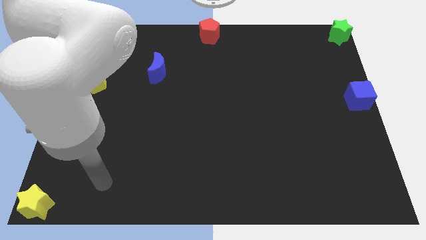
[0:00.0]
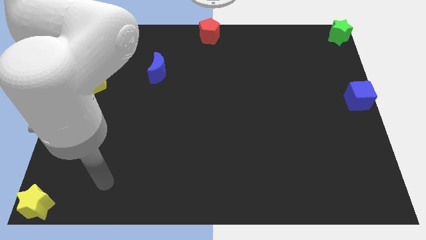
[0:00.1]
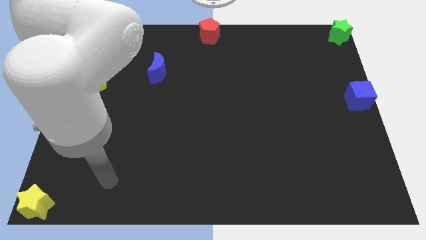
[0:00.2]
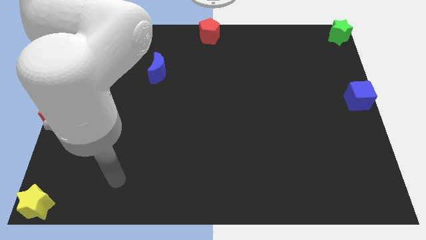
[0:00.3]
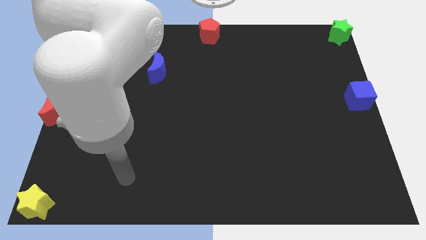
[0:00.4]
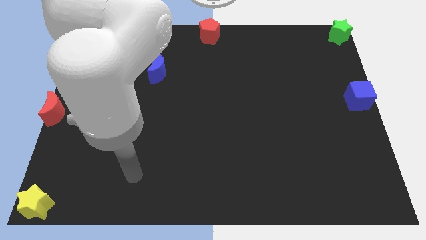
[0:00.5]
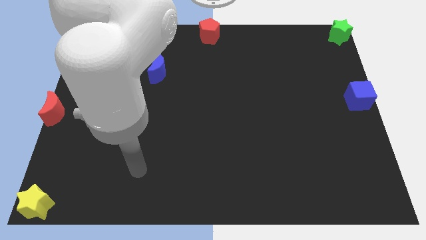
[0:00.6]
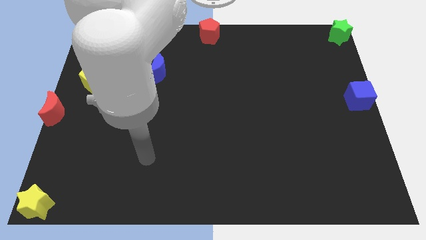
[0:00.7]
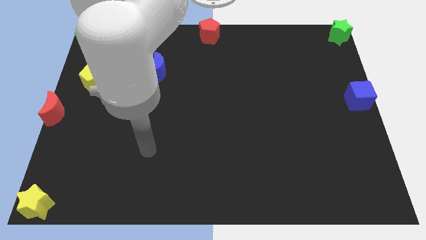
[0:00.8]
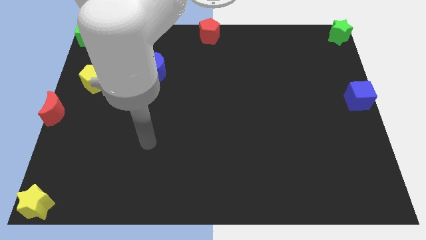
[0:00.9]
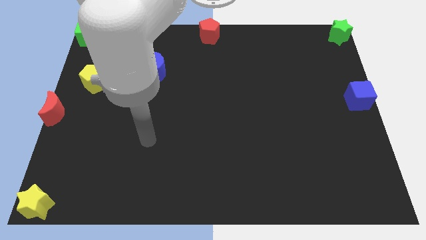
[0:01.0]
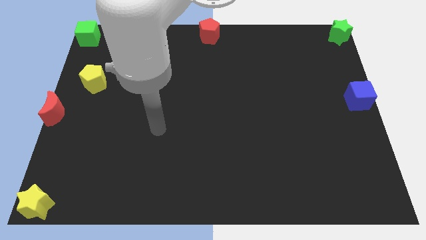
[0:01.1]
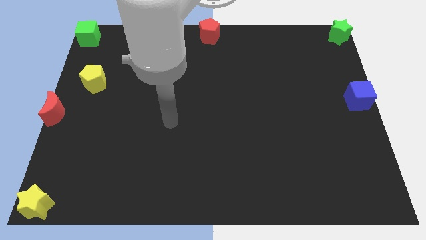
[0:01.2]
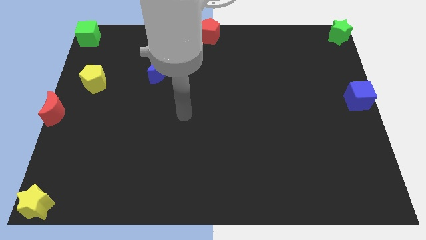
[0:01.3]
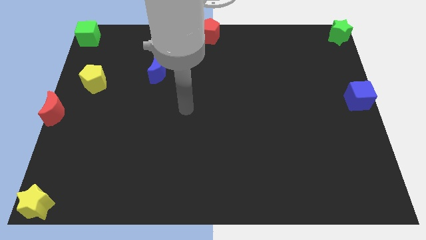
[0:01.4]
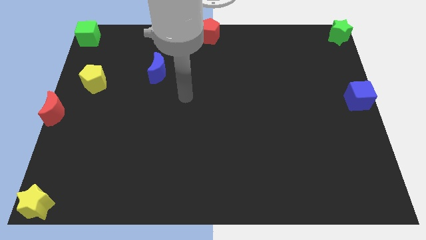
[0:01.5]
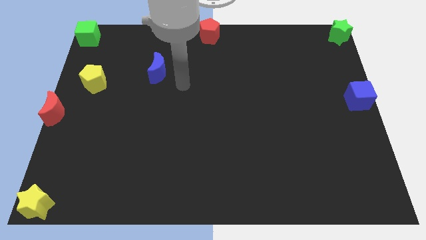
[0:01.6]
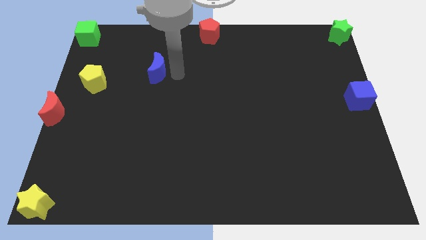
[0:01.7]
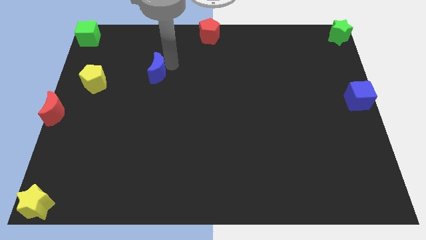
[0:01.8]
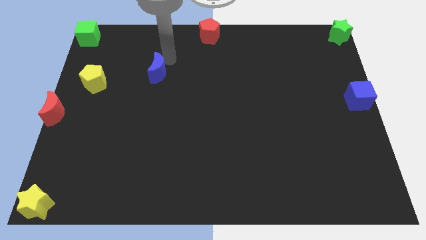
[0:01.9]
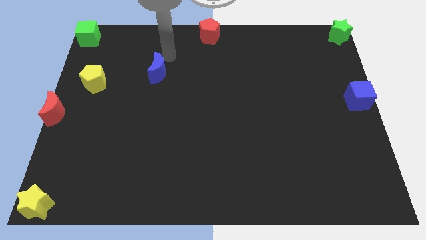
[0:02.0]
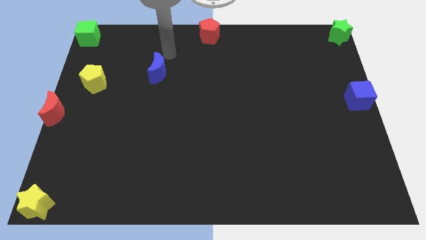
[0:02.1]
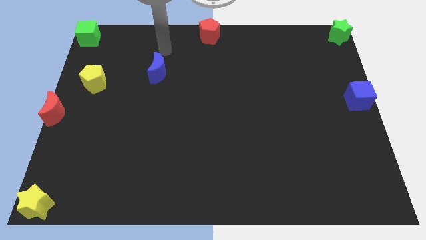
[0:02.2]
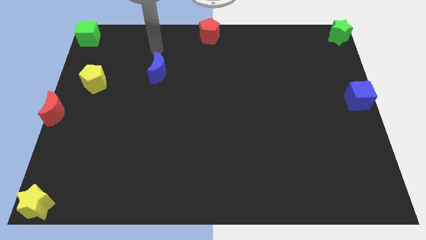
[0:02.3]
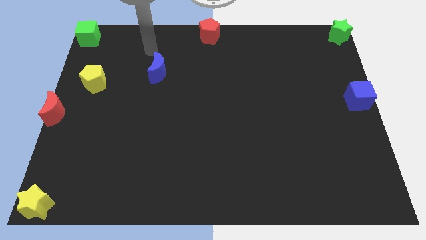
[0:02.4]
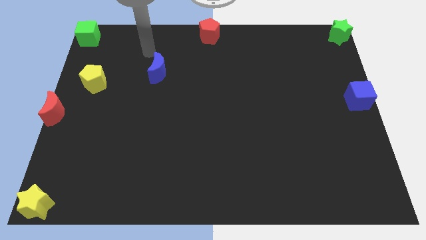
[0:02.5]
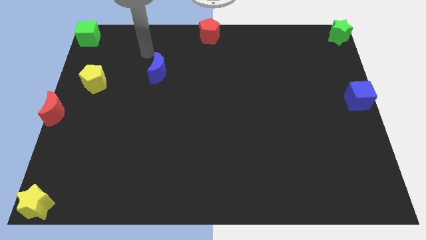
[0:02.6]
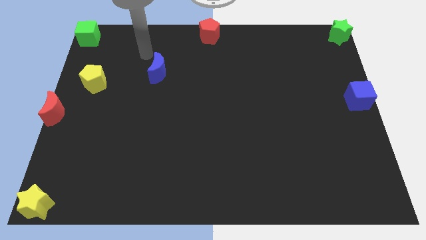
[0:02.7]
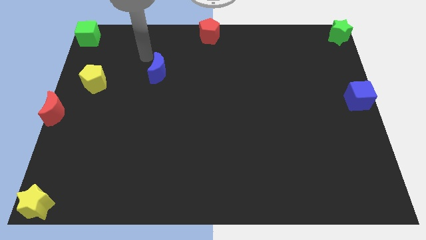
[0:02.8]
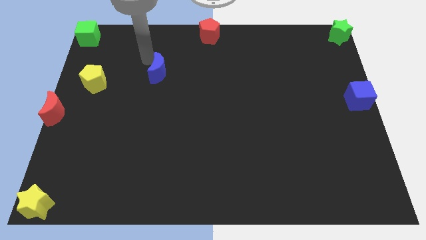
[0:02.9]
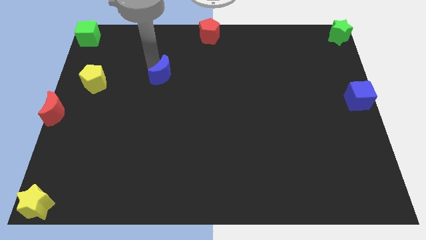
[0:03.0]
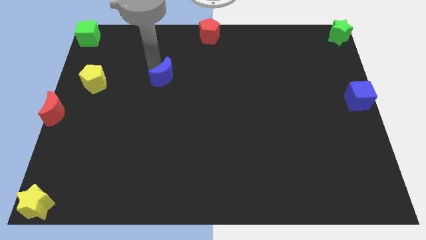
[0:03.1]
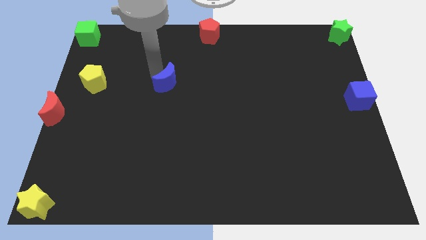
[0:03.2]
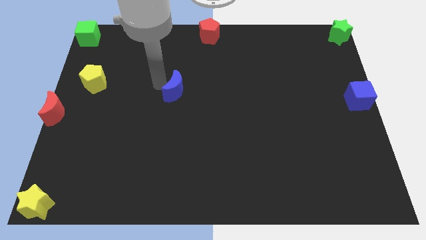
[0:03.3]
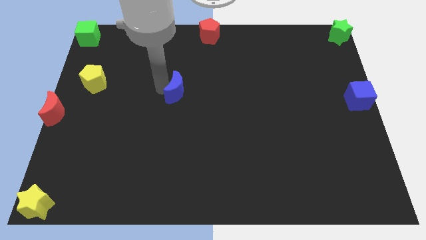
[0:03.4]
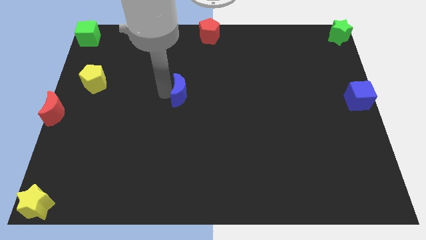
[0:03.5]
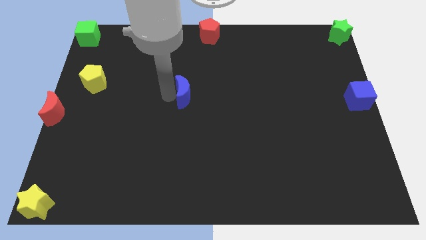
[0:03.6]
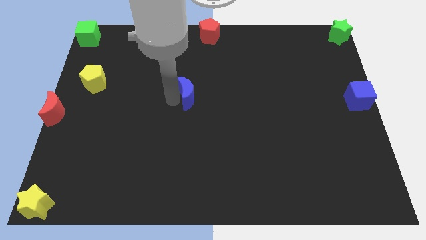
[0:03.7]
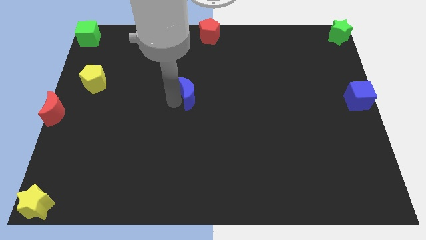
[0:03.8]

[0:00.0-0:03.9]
move the blue crescent horizontally to the left side of the blue cube

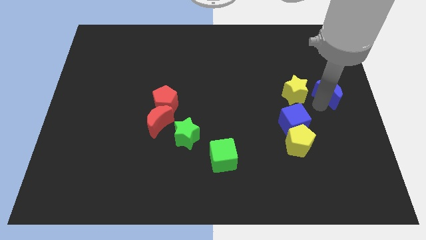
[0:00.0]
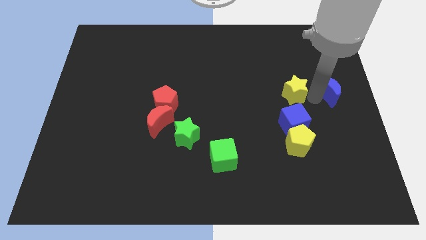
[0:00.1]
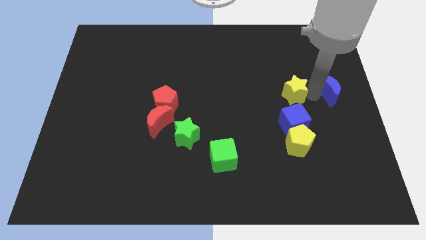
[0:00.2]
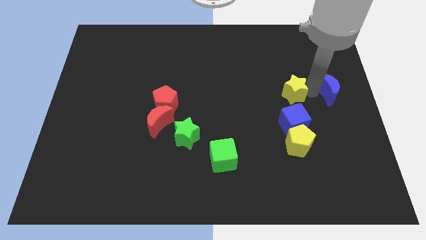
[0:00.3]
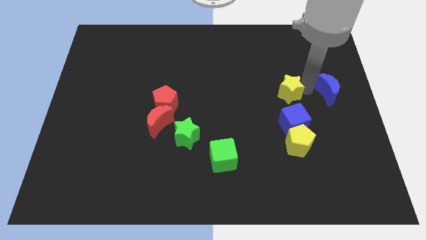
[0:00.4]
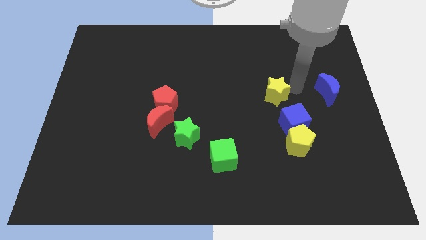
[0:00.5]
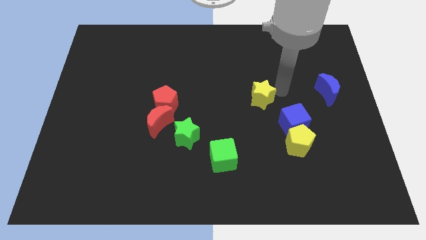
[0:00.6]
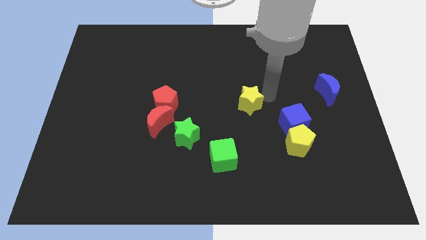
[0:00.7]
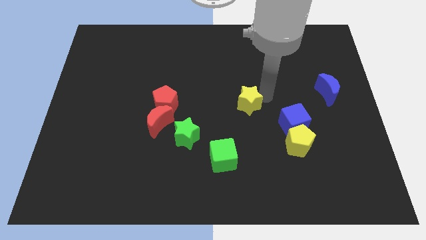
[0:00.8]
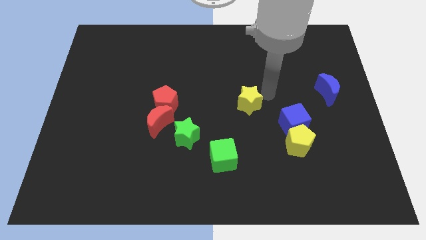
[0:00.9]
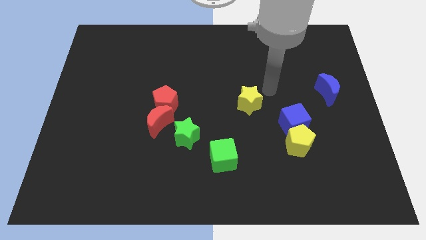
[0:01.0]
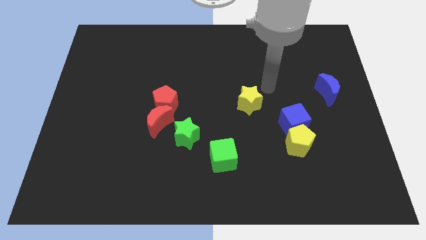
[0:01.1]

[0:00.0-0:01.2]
move the yellow star left to the blue cube

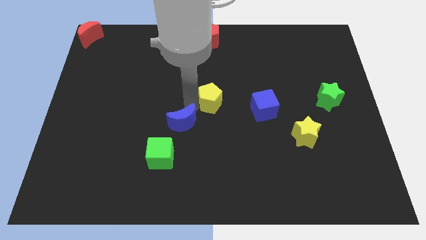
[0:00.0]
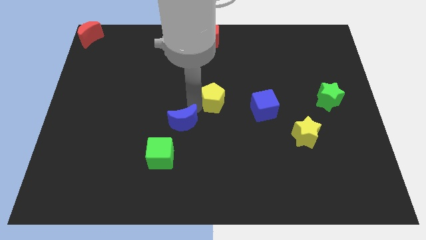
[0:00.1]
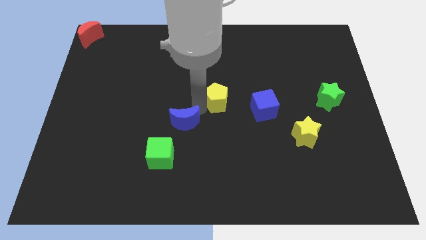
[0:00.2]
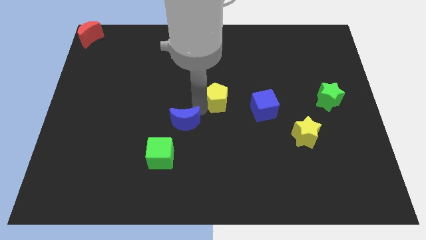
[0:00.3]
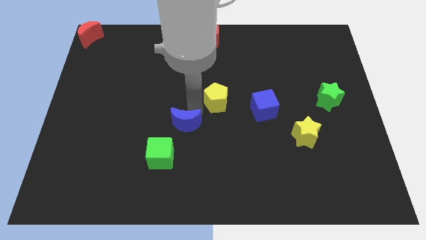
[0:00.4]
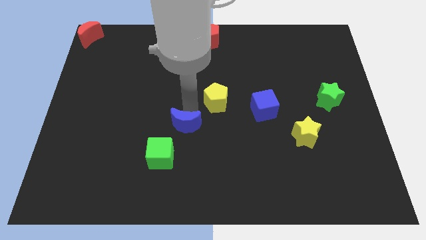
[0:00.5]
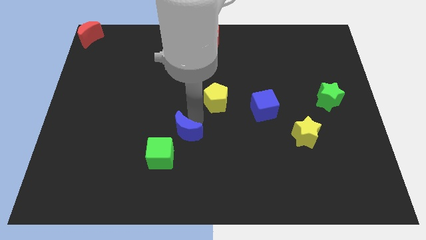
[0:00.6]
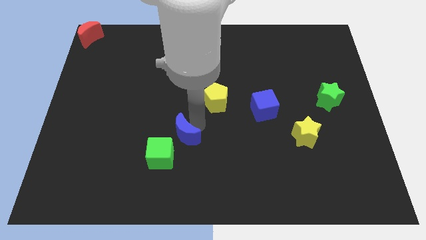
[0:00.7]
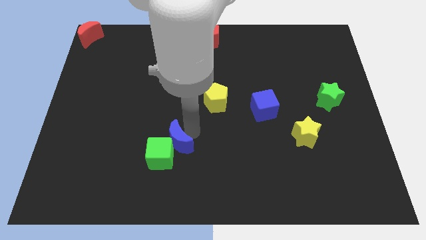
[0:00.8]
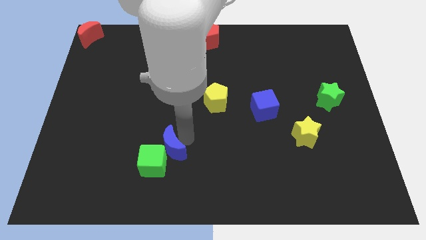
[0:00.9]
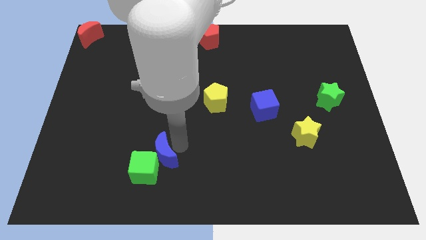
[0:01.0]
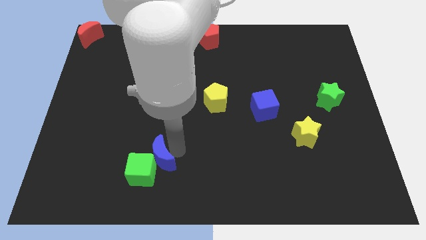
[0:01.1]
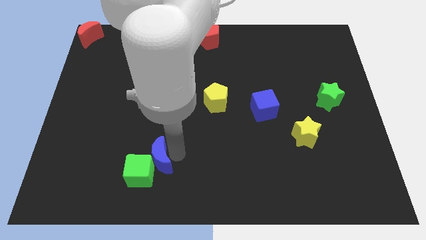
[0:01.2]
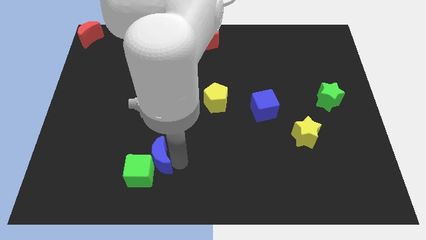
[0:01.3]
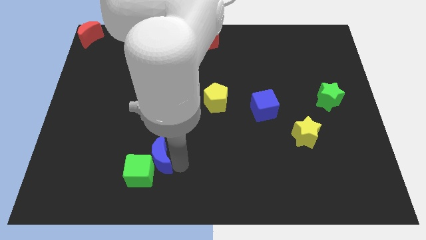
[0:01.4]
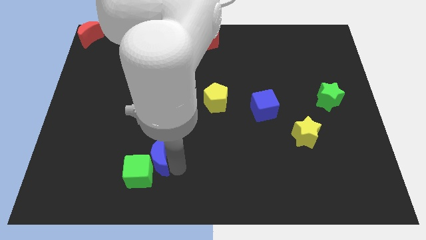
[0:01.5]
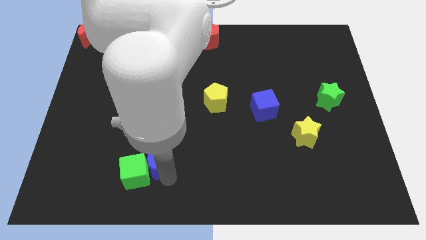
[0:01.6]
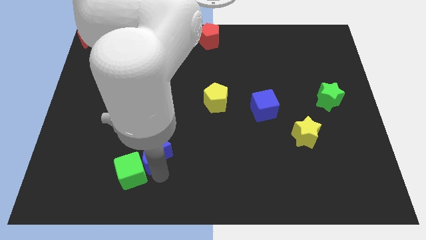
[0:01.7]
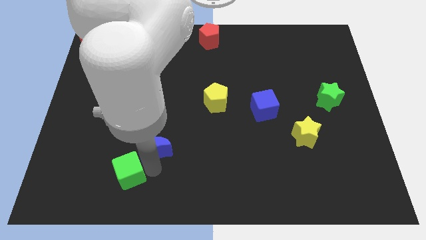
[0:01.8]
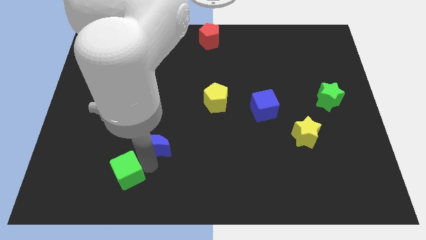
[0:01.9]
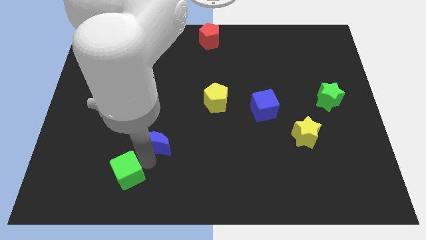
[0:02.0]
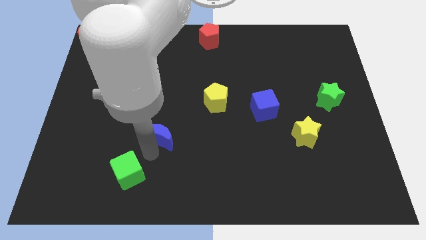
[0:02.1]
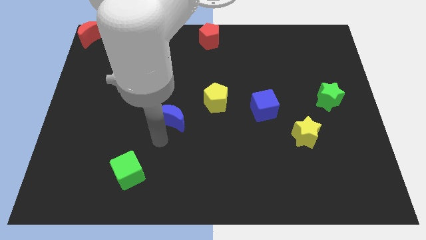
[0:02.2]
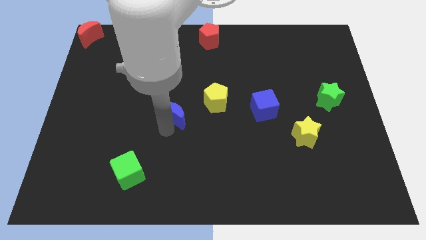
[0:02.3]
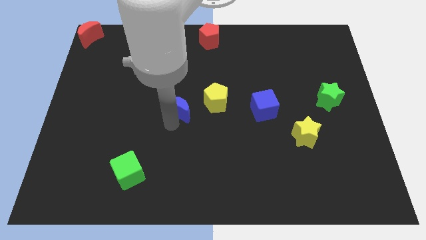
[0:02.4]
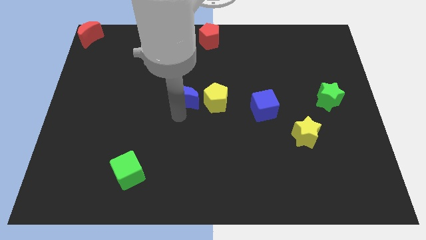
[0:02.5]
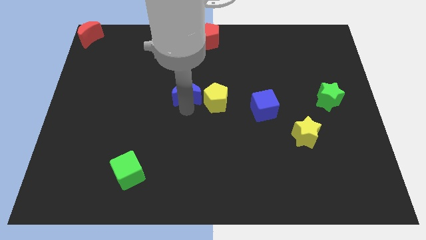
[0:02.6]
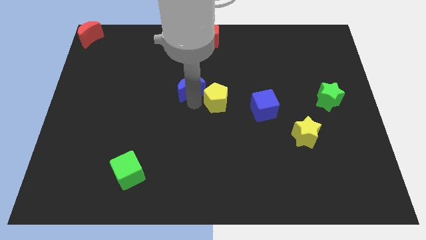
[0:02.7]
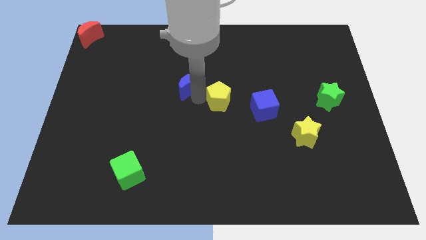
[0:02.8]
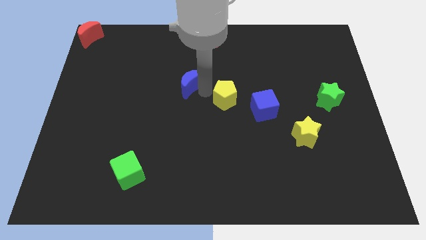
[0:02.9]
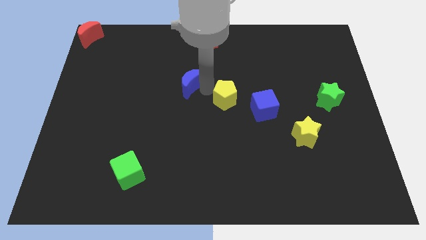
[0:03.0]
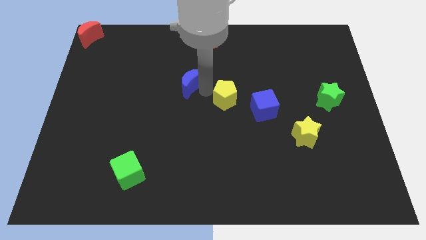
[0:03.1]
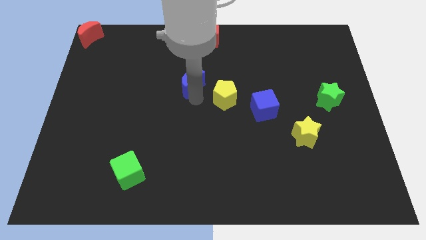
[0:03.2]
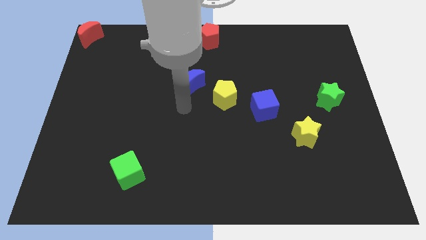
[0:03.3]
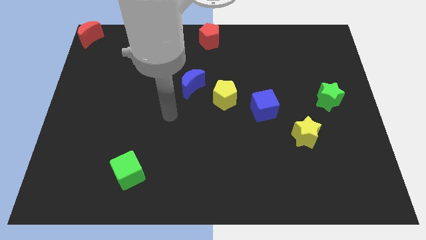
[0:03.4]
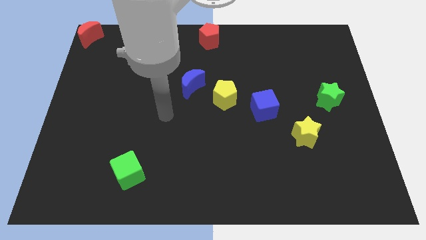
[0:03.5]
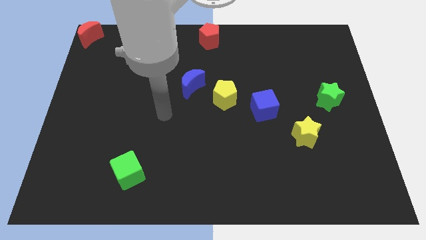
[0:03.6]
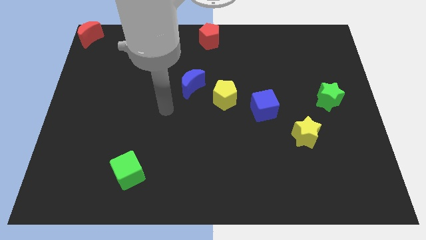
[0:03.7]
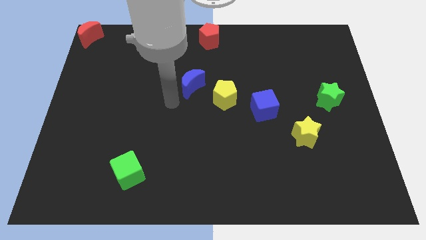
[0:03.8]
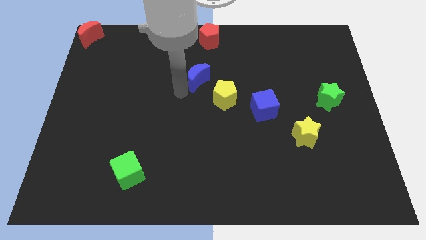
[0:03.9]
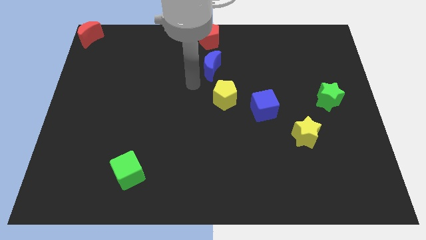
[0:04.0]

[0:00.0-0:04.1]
place the blue crescent below the red pentagon
